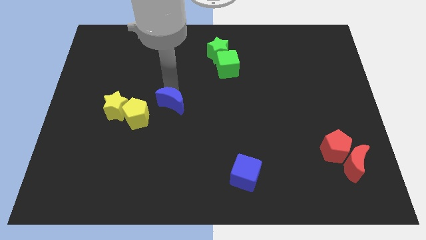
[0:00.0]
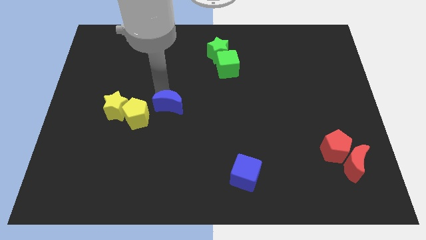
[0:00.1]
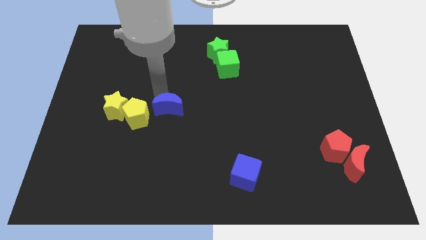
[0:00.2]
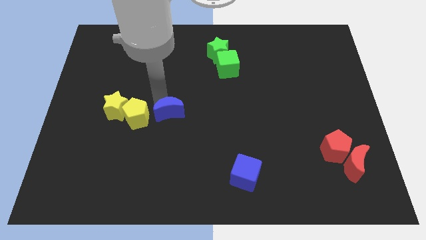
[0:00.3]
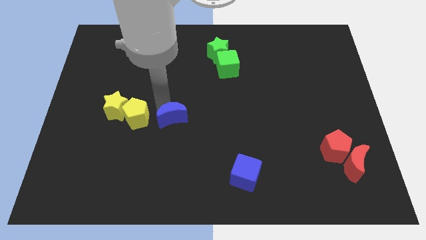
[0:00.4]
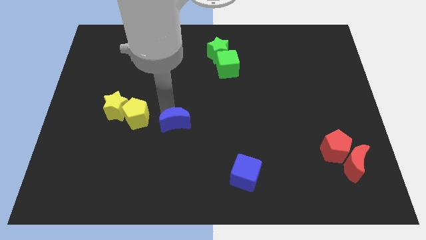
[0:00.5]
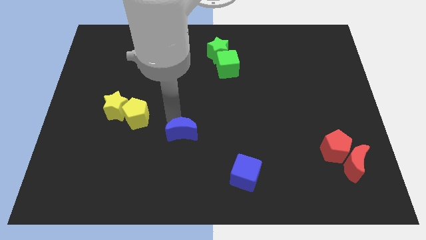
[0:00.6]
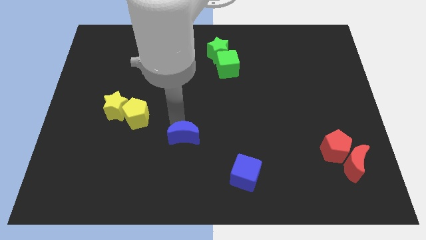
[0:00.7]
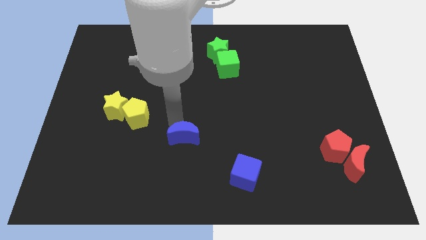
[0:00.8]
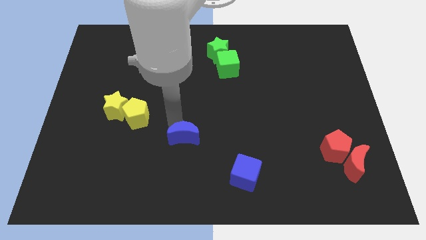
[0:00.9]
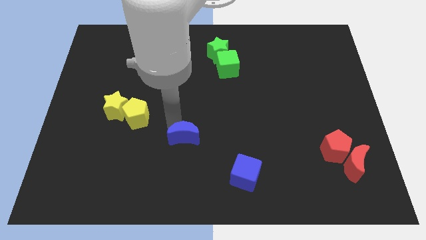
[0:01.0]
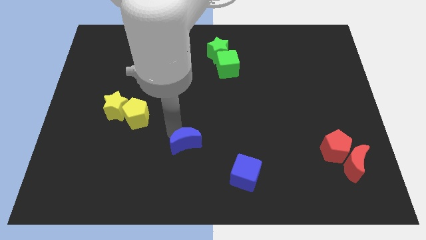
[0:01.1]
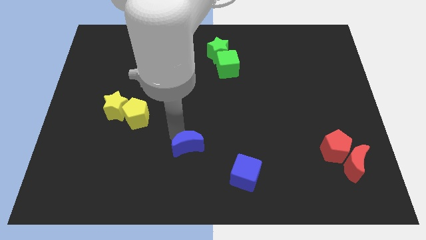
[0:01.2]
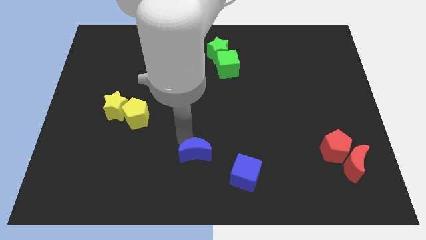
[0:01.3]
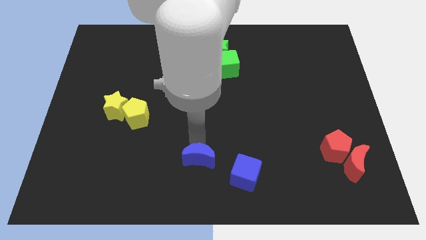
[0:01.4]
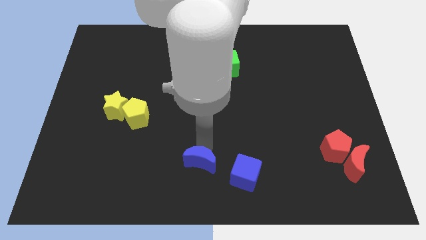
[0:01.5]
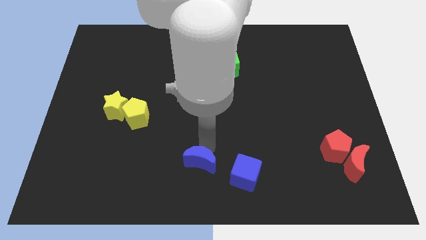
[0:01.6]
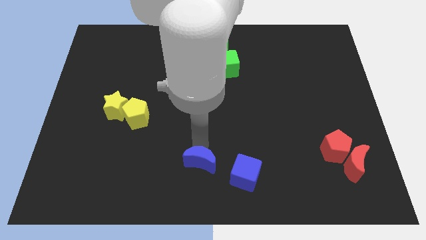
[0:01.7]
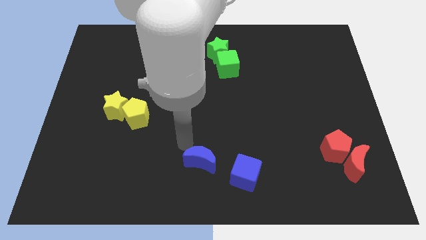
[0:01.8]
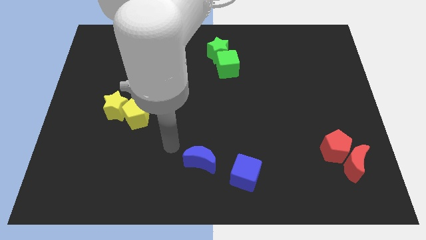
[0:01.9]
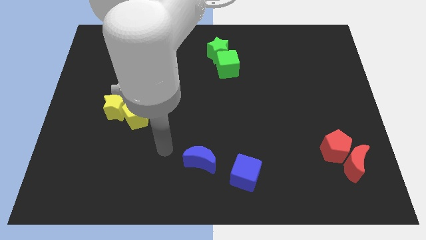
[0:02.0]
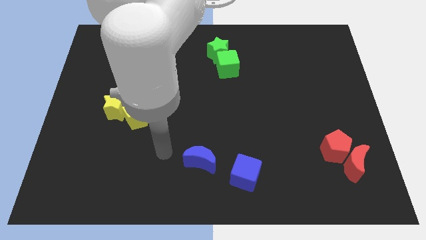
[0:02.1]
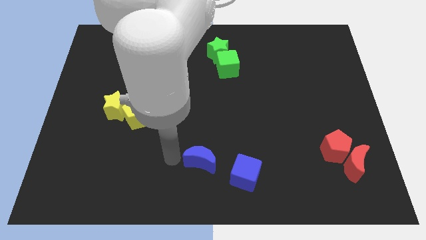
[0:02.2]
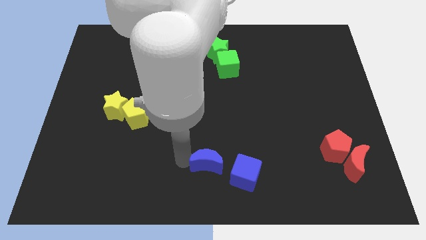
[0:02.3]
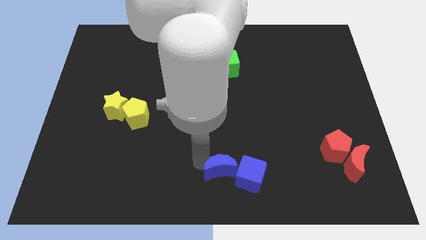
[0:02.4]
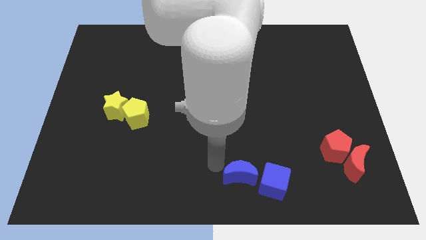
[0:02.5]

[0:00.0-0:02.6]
push the blue cube in to blue crescent

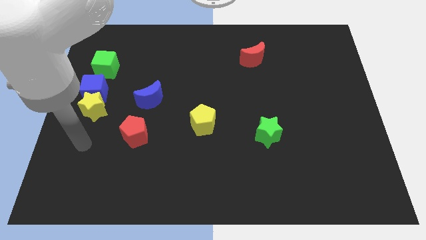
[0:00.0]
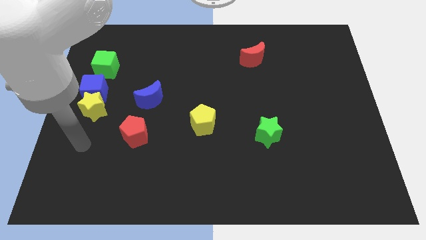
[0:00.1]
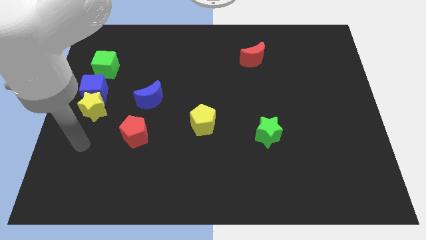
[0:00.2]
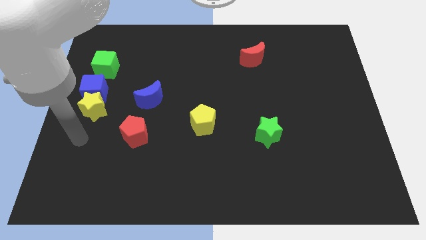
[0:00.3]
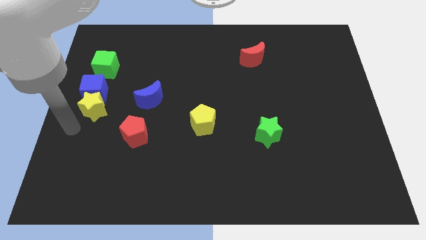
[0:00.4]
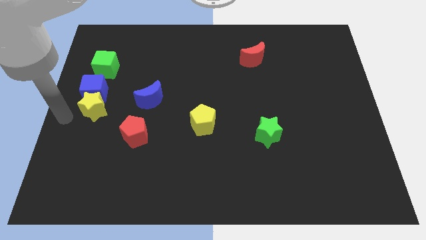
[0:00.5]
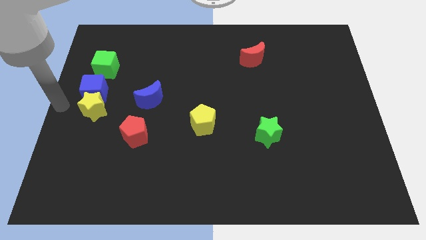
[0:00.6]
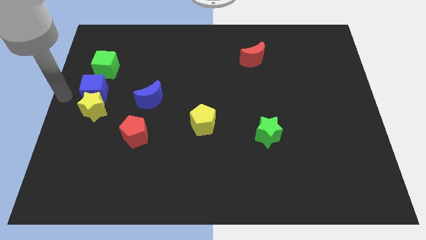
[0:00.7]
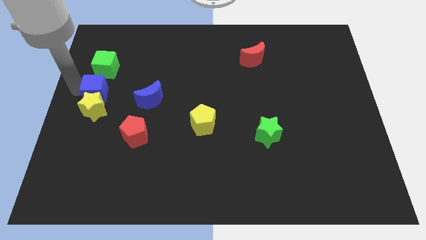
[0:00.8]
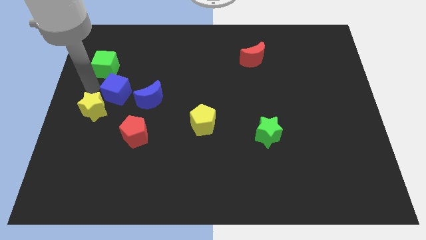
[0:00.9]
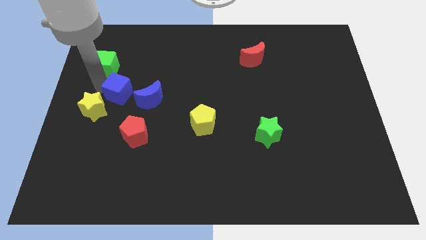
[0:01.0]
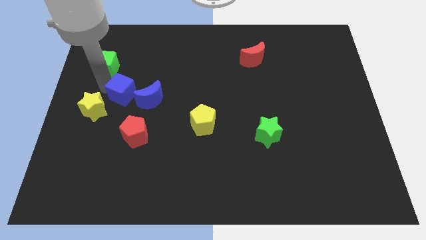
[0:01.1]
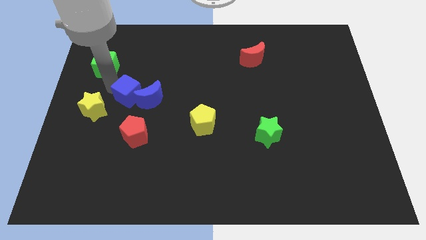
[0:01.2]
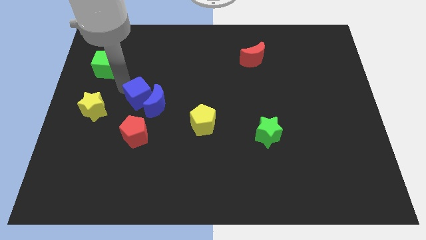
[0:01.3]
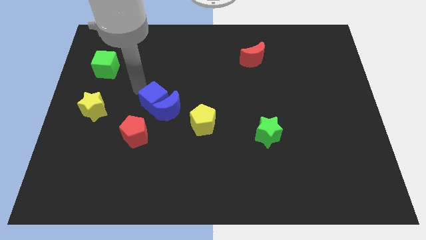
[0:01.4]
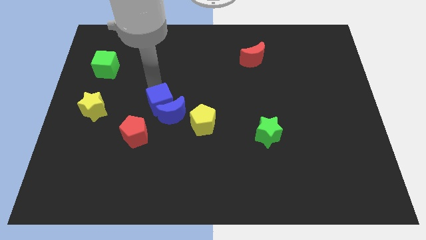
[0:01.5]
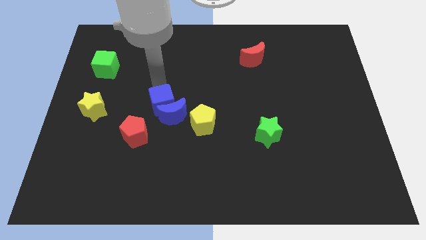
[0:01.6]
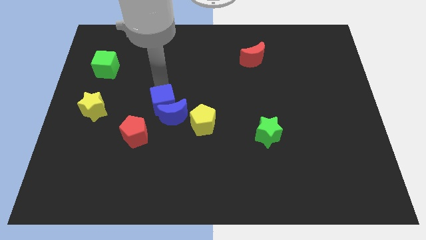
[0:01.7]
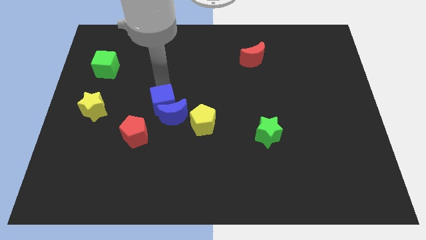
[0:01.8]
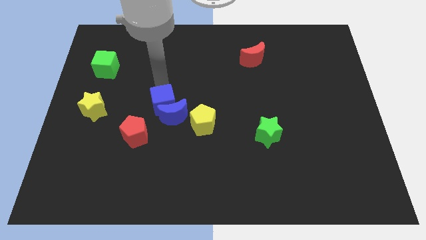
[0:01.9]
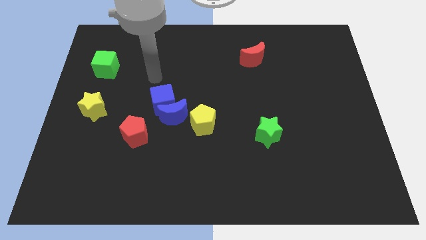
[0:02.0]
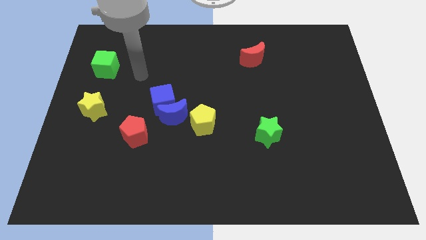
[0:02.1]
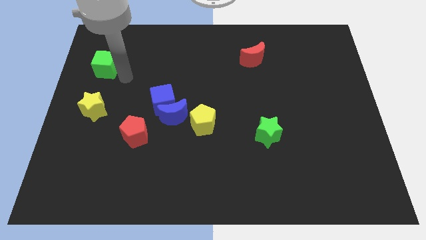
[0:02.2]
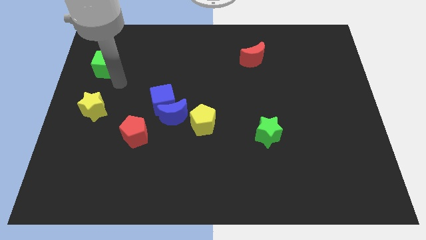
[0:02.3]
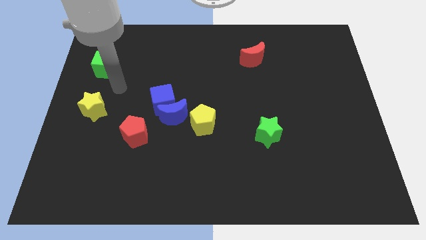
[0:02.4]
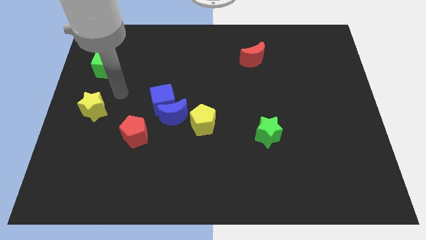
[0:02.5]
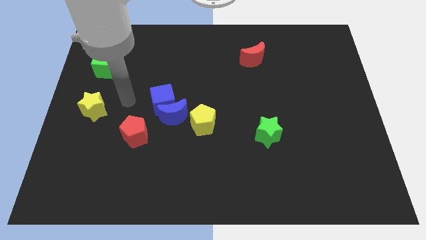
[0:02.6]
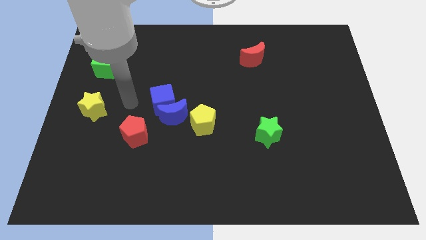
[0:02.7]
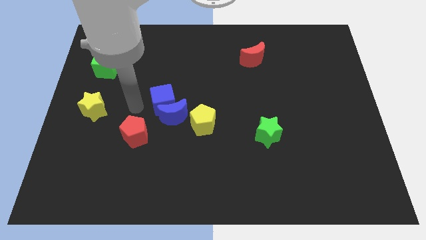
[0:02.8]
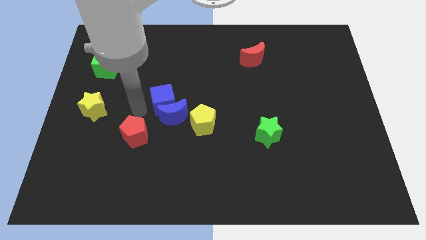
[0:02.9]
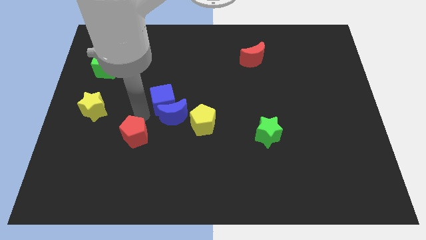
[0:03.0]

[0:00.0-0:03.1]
push the blue cube to the top of the blue crescent

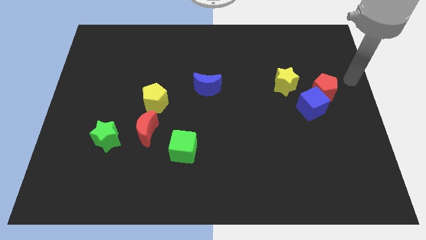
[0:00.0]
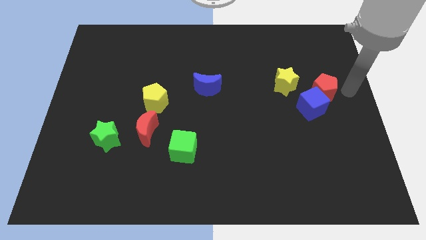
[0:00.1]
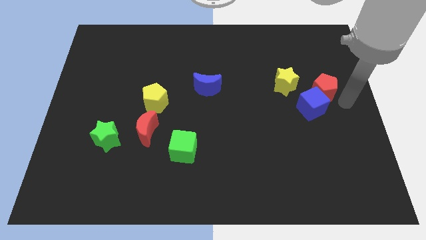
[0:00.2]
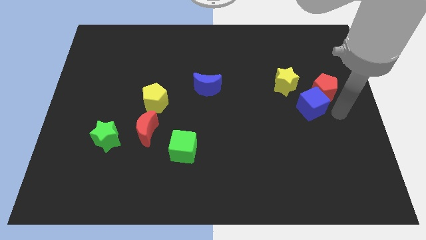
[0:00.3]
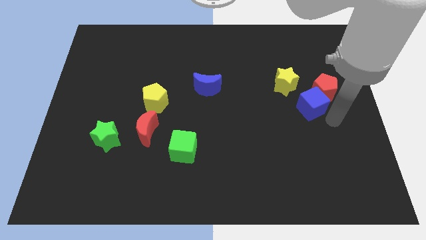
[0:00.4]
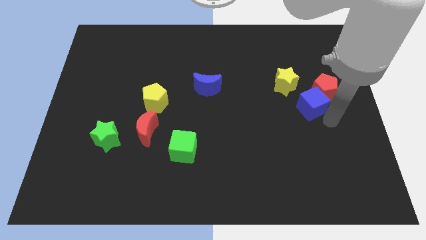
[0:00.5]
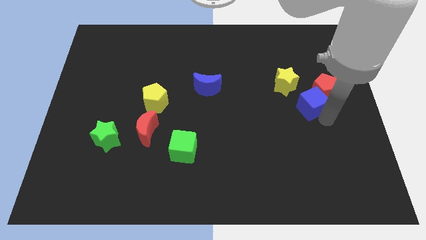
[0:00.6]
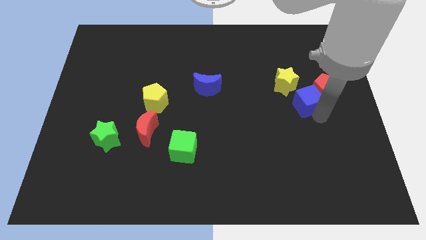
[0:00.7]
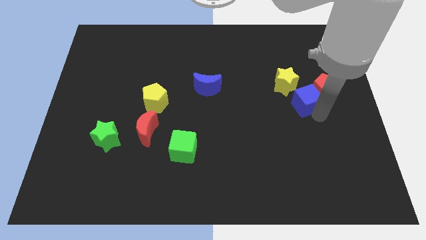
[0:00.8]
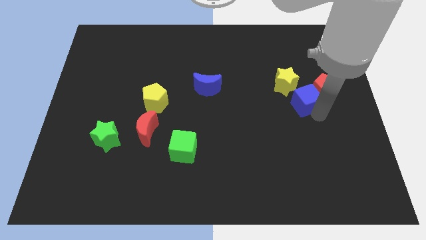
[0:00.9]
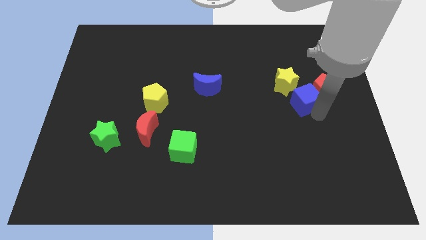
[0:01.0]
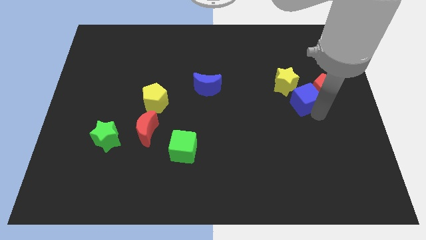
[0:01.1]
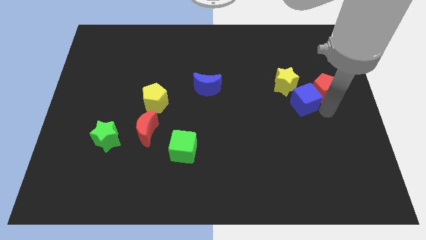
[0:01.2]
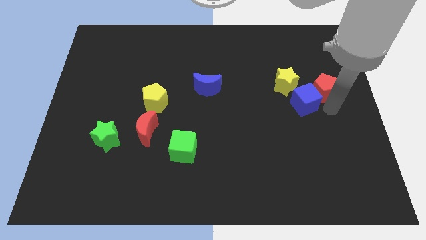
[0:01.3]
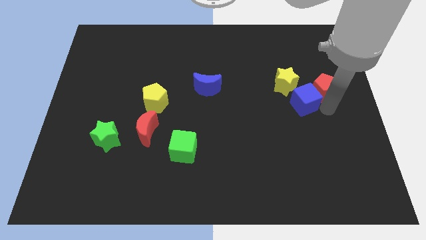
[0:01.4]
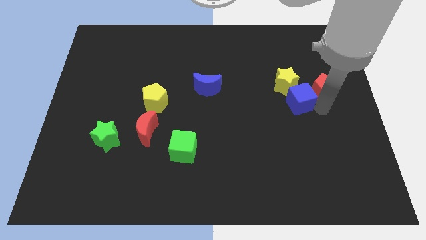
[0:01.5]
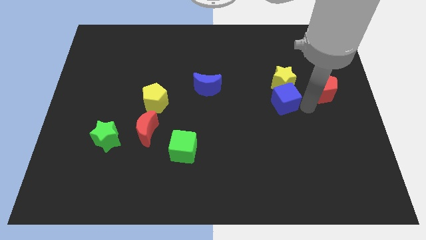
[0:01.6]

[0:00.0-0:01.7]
place the blue cube down to the yellow star

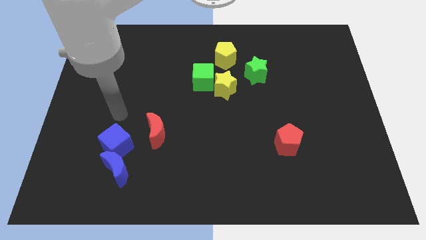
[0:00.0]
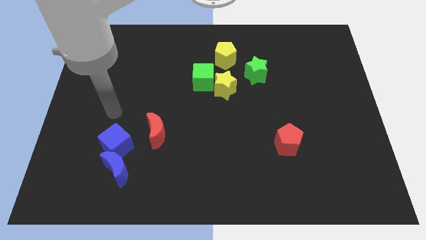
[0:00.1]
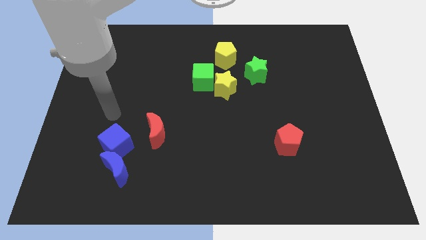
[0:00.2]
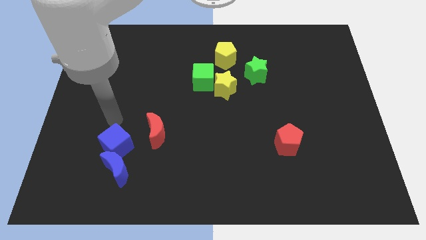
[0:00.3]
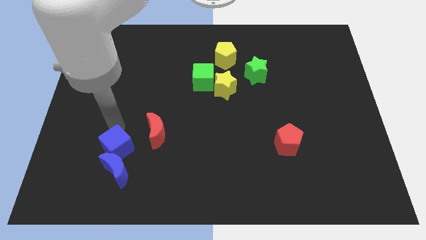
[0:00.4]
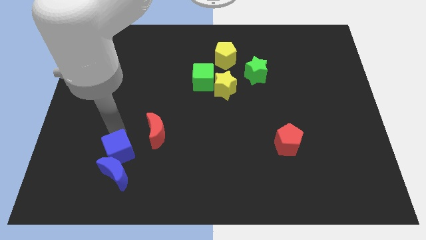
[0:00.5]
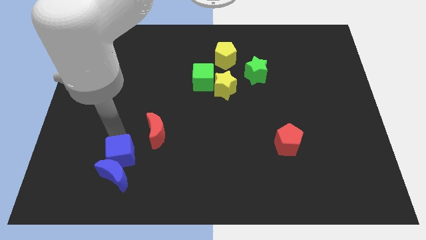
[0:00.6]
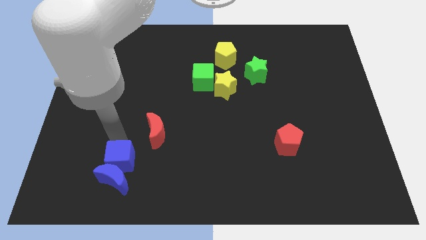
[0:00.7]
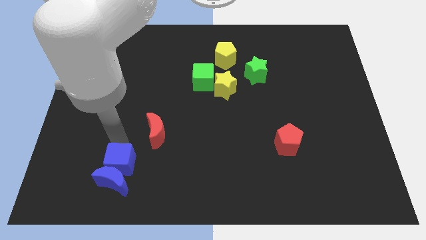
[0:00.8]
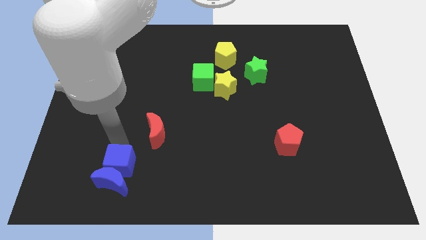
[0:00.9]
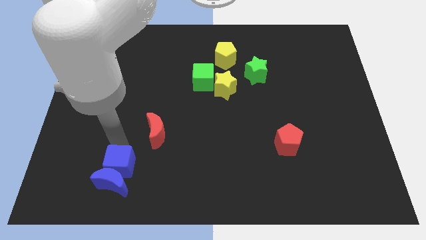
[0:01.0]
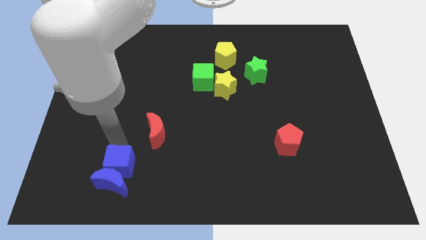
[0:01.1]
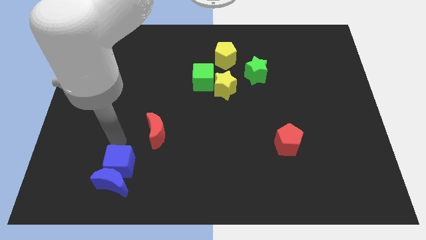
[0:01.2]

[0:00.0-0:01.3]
move the blue blocks towards bottom side of the board

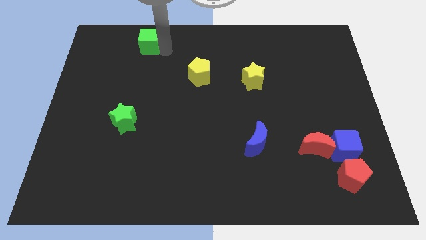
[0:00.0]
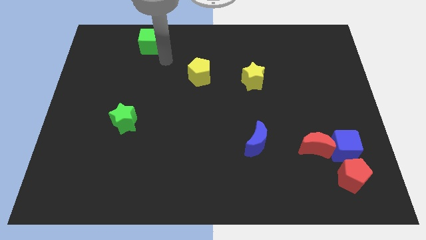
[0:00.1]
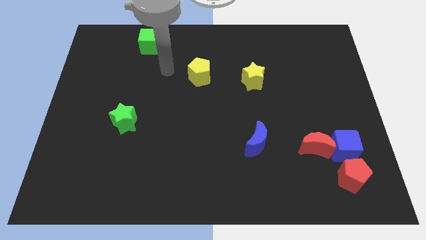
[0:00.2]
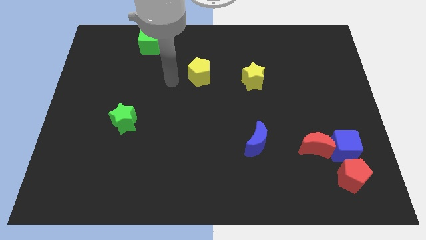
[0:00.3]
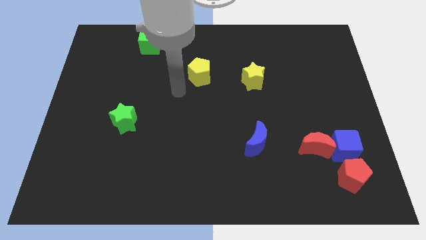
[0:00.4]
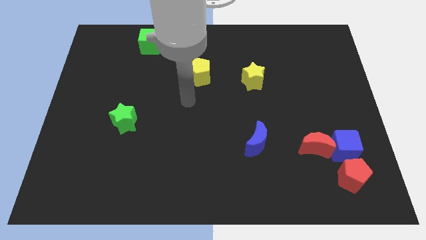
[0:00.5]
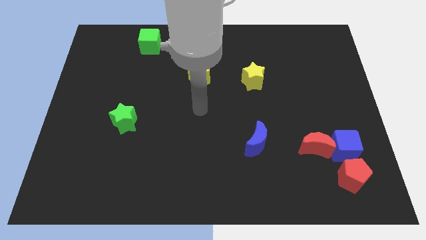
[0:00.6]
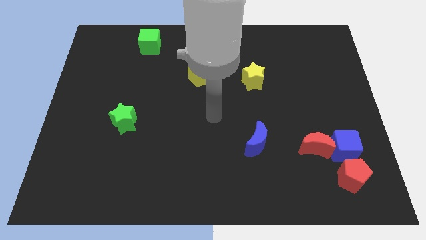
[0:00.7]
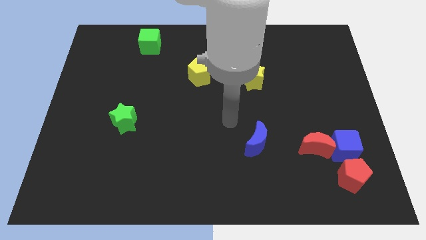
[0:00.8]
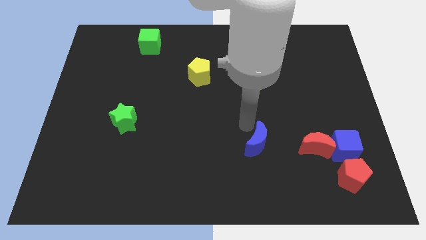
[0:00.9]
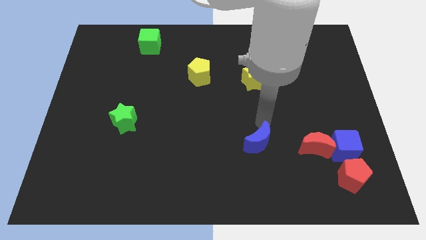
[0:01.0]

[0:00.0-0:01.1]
move the arm away from the green cube
